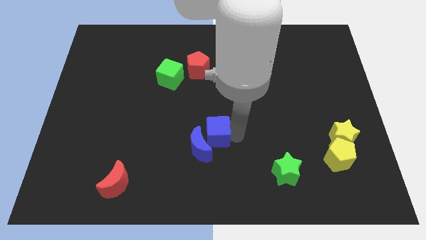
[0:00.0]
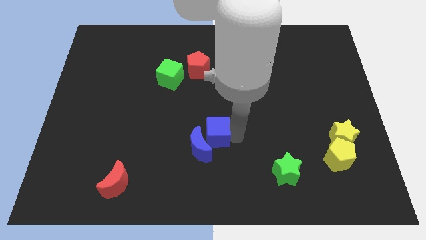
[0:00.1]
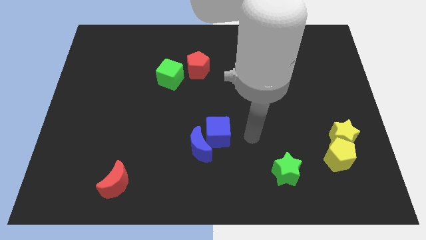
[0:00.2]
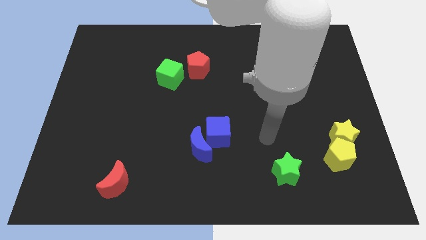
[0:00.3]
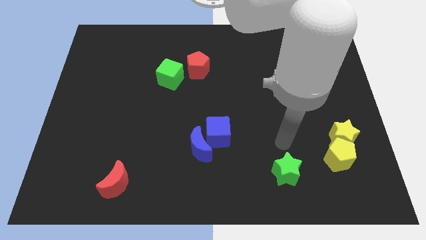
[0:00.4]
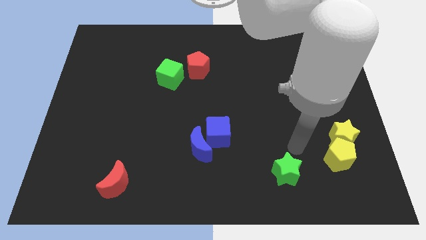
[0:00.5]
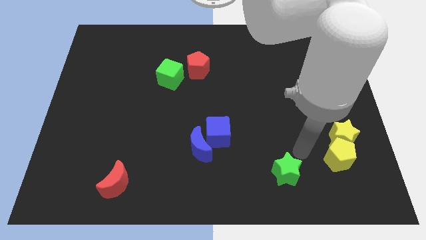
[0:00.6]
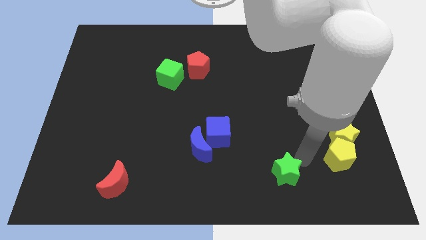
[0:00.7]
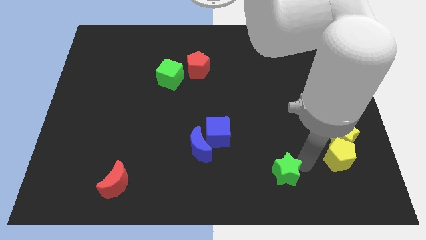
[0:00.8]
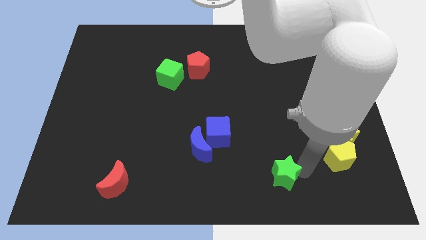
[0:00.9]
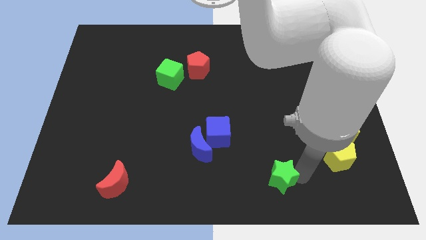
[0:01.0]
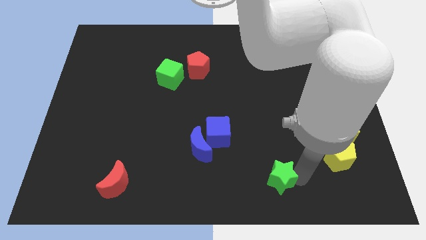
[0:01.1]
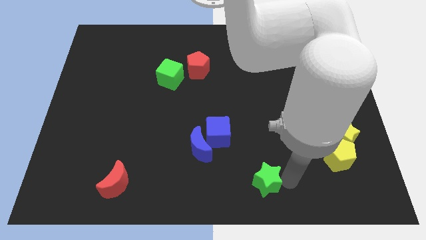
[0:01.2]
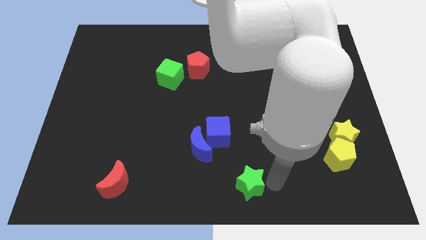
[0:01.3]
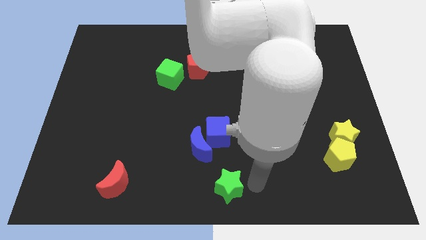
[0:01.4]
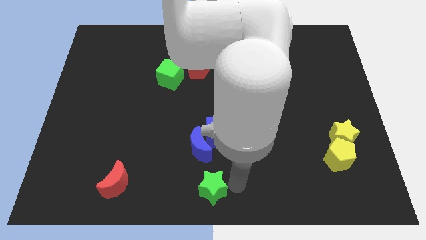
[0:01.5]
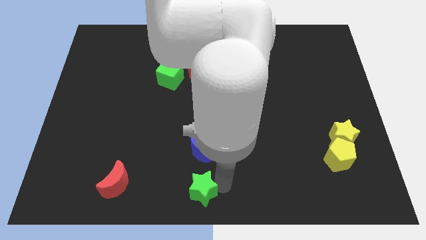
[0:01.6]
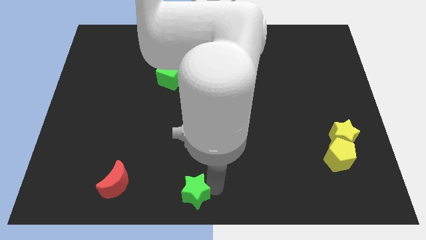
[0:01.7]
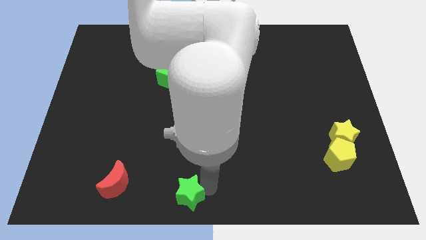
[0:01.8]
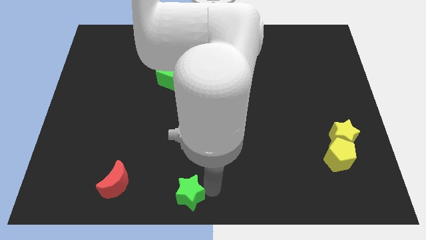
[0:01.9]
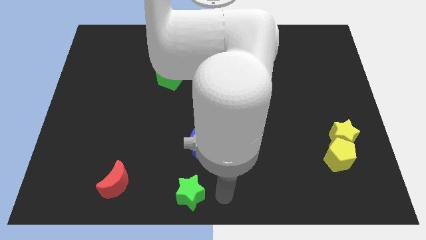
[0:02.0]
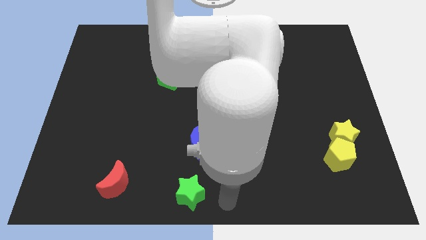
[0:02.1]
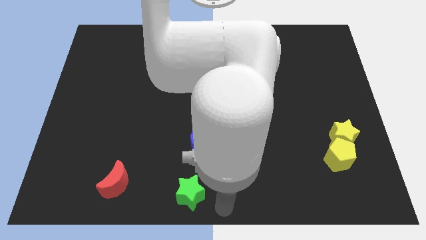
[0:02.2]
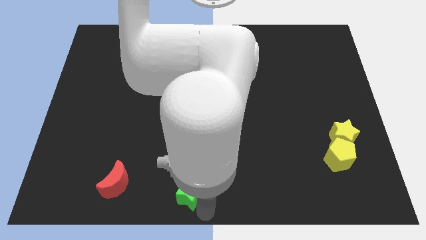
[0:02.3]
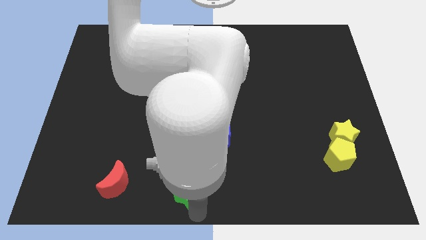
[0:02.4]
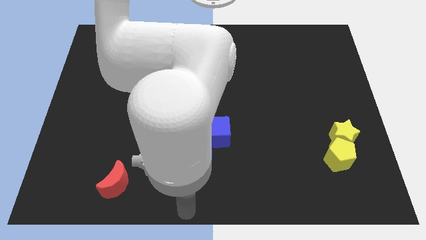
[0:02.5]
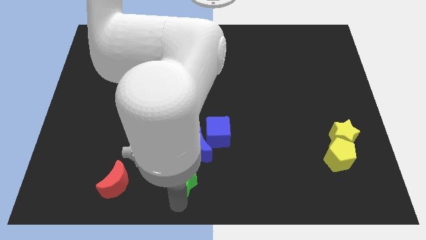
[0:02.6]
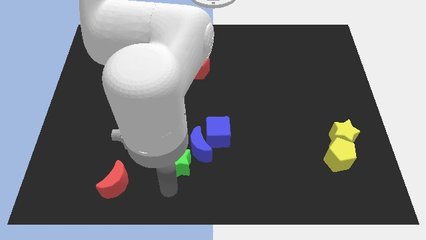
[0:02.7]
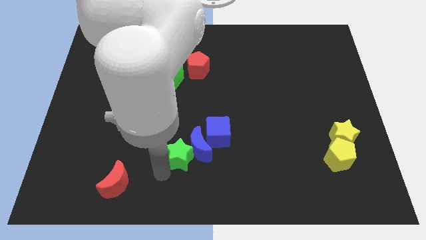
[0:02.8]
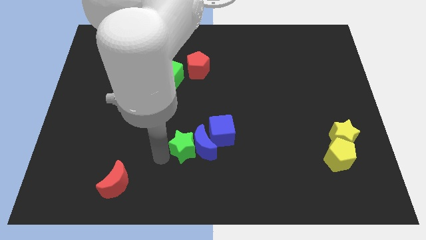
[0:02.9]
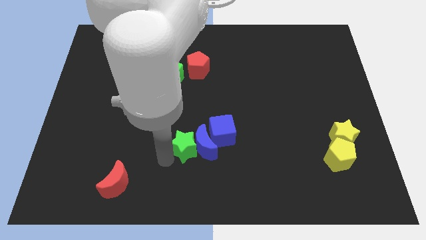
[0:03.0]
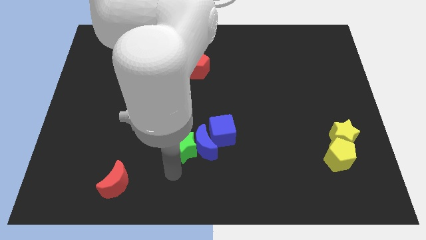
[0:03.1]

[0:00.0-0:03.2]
move the green star to the left side of the blue moon

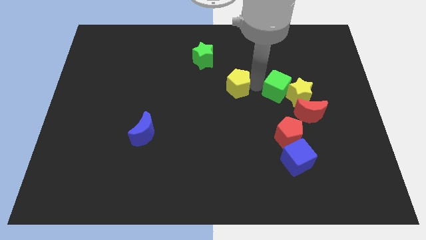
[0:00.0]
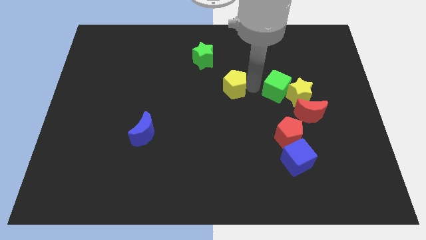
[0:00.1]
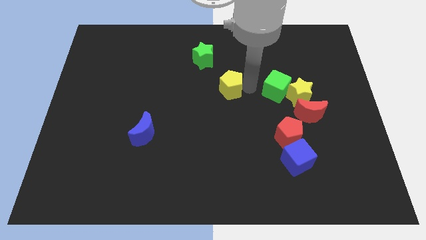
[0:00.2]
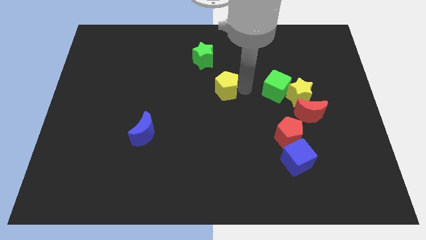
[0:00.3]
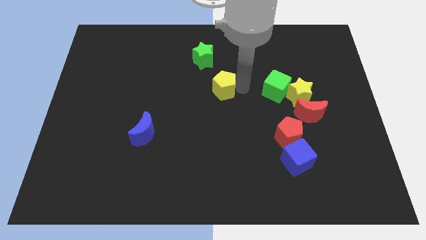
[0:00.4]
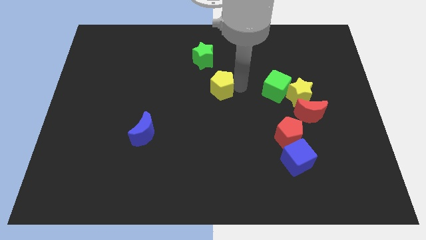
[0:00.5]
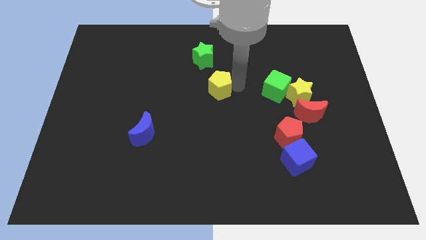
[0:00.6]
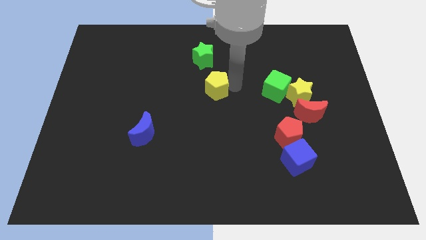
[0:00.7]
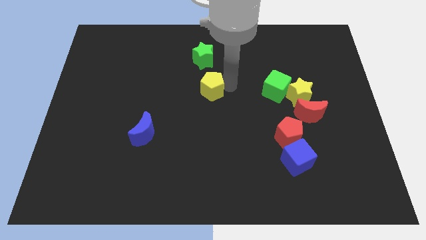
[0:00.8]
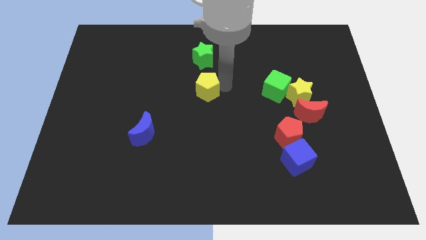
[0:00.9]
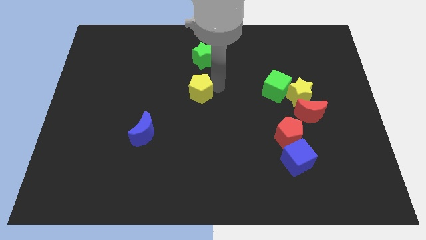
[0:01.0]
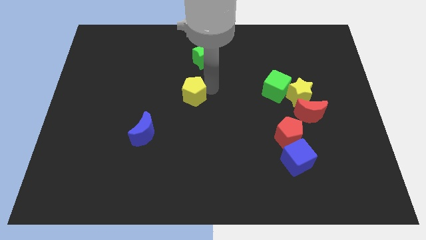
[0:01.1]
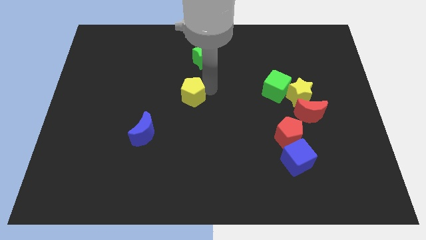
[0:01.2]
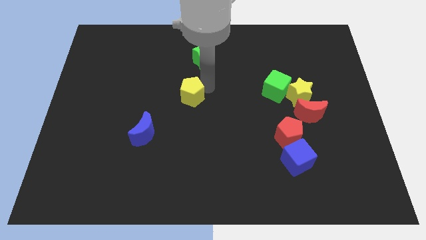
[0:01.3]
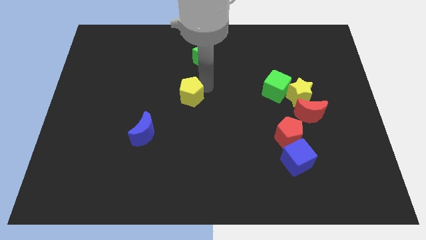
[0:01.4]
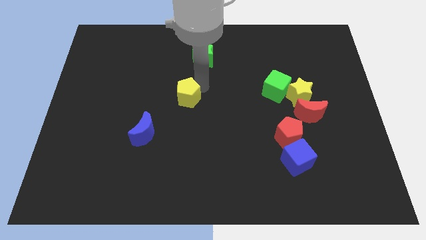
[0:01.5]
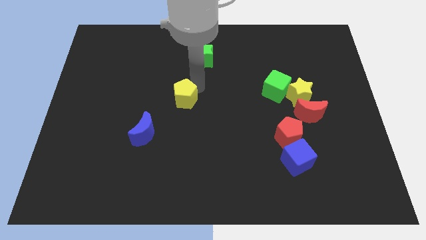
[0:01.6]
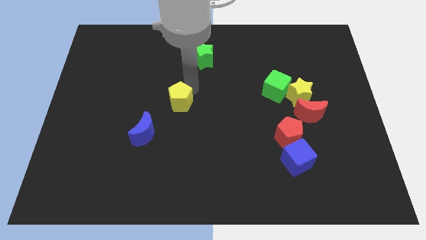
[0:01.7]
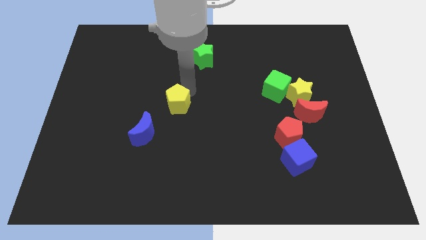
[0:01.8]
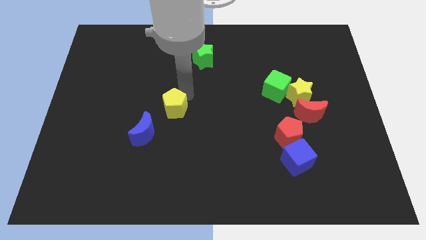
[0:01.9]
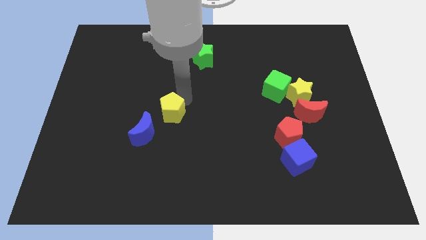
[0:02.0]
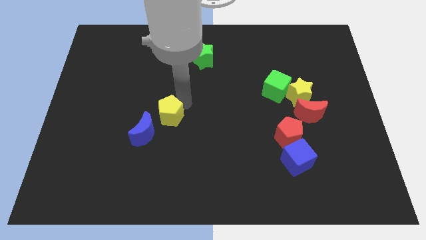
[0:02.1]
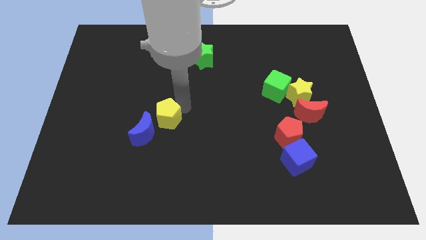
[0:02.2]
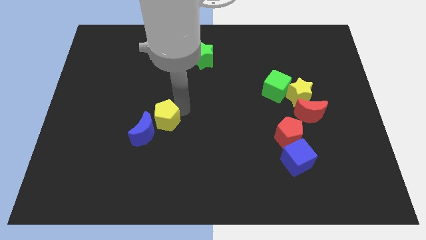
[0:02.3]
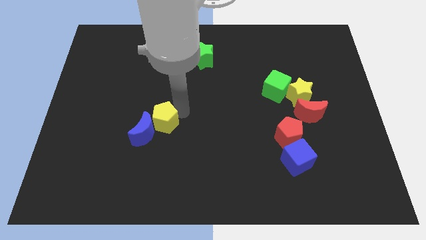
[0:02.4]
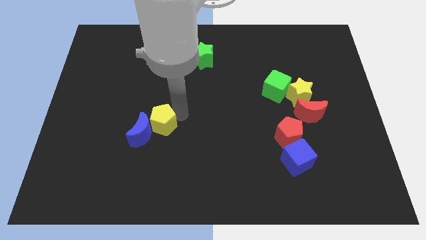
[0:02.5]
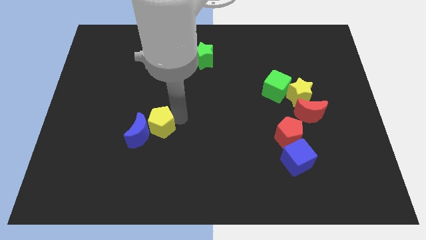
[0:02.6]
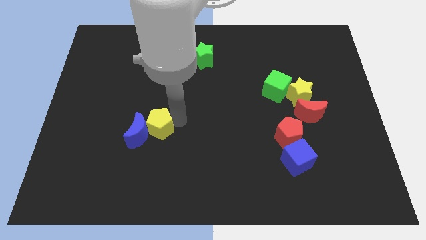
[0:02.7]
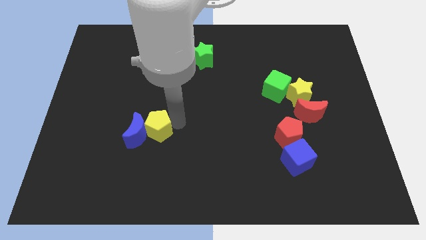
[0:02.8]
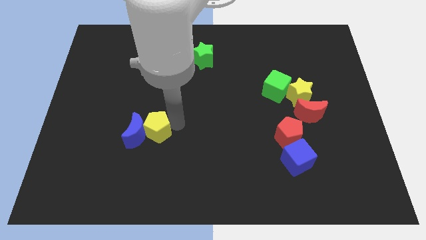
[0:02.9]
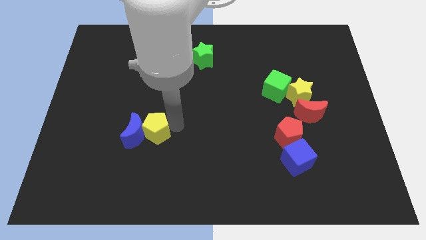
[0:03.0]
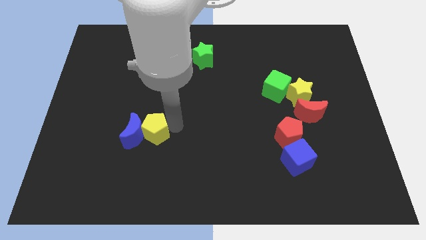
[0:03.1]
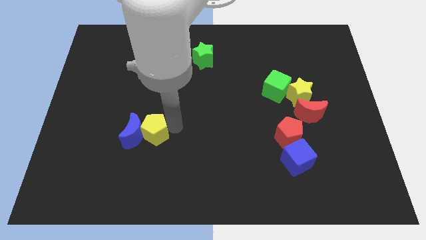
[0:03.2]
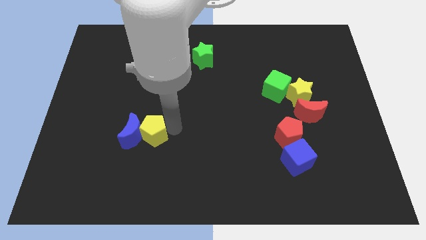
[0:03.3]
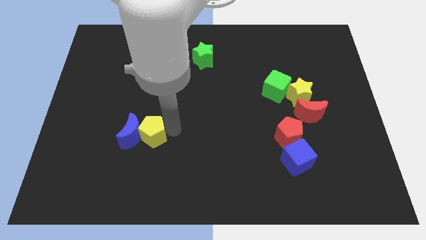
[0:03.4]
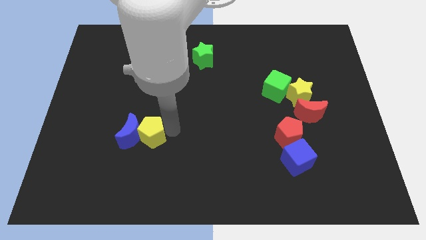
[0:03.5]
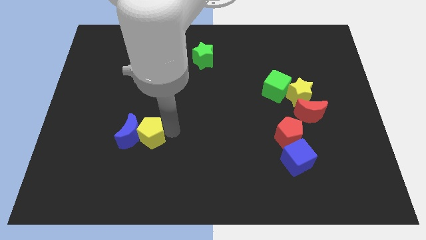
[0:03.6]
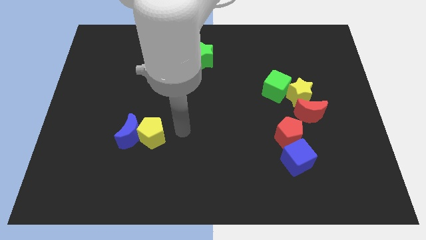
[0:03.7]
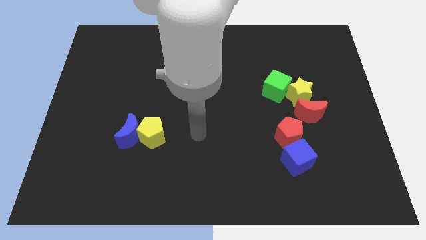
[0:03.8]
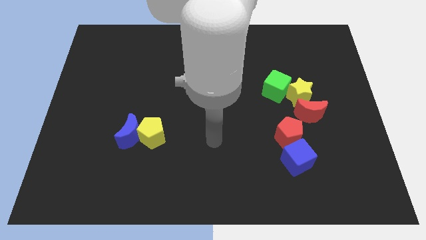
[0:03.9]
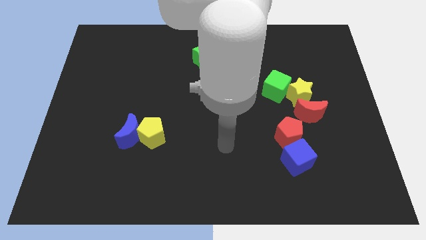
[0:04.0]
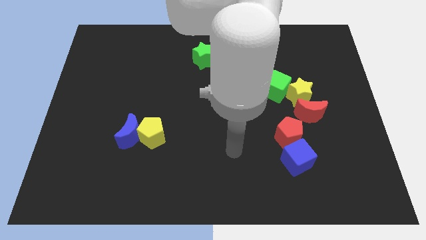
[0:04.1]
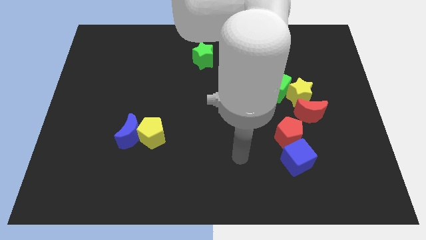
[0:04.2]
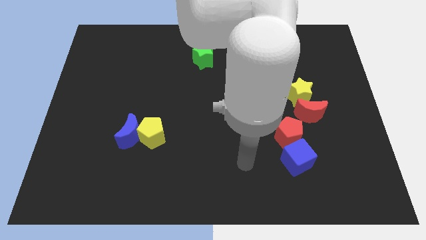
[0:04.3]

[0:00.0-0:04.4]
move yellow pentagon to the right of blue moon

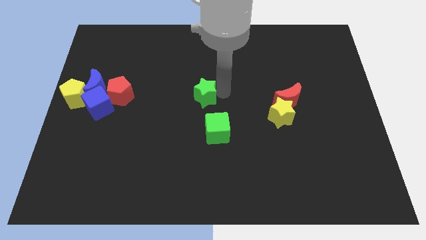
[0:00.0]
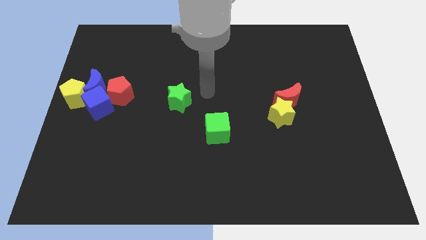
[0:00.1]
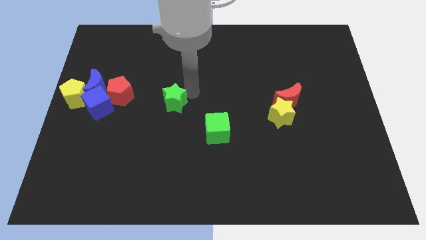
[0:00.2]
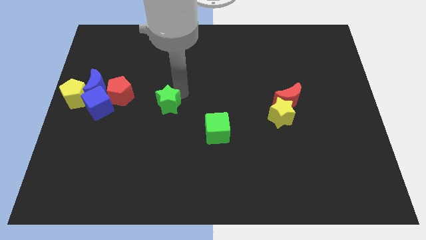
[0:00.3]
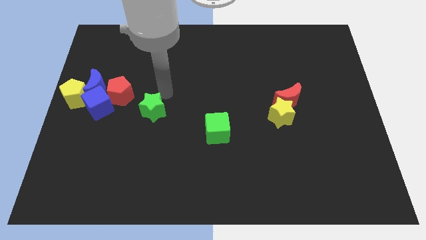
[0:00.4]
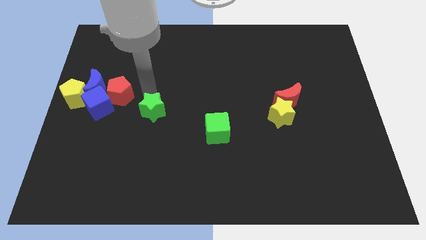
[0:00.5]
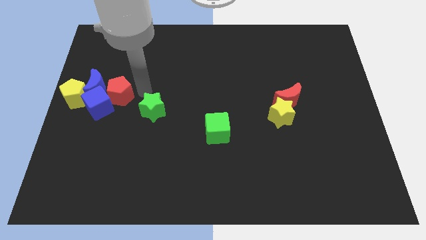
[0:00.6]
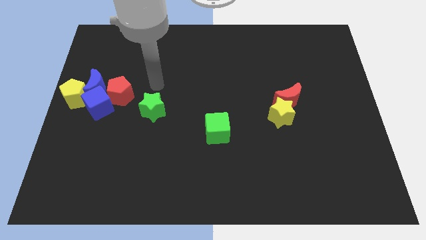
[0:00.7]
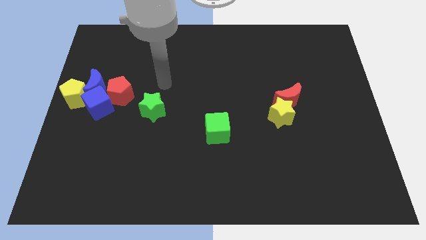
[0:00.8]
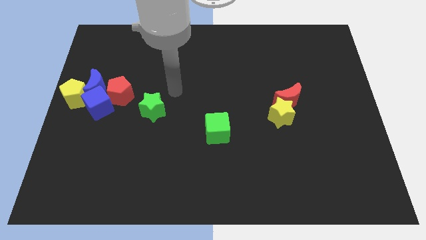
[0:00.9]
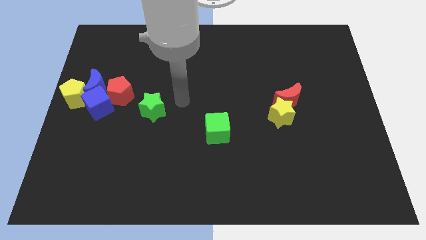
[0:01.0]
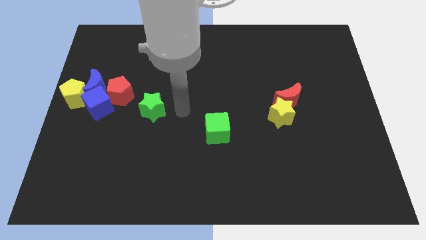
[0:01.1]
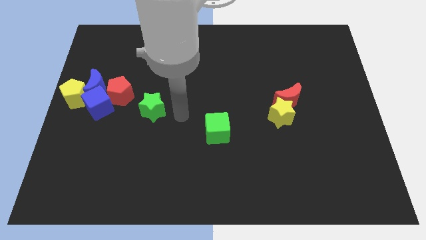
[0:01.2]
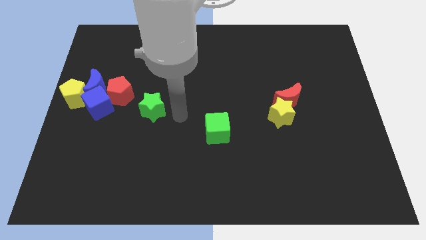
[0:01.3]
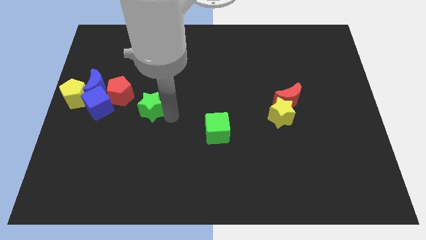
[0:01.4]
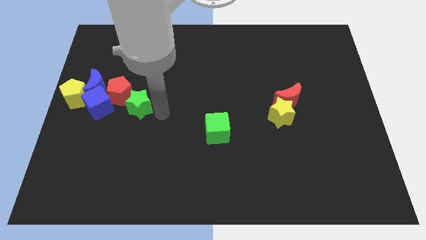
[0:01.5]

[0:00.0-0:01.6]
push the green star into the red pentagon from the right
